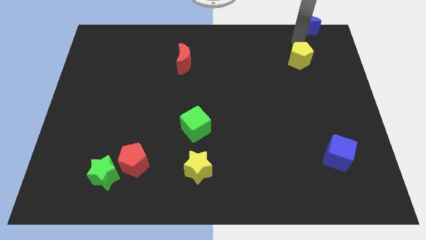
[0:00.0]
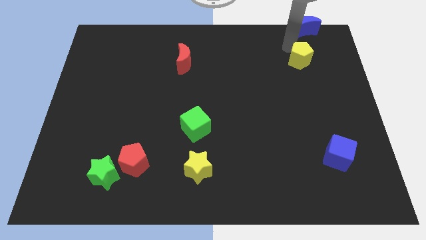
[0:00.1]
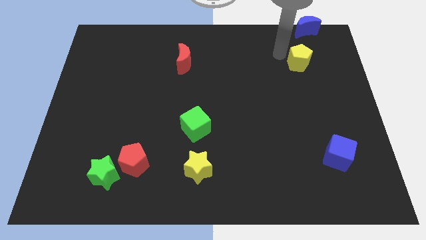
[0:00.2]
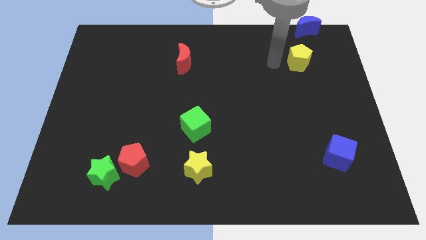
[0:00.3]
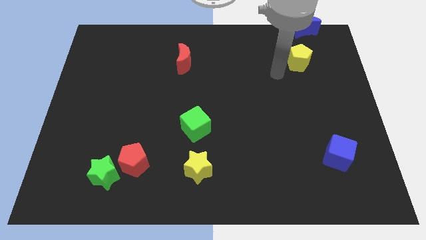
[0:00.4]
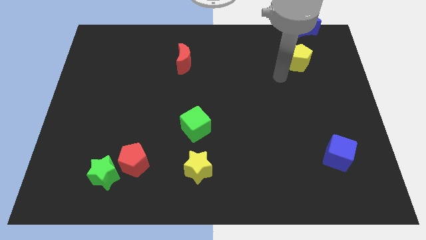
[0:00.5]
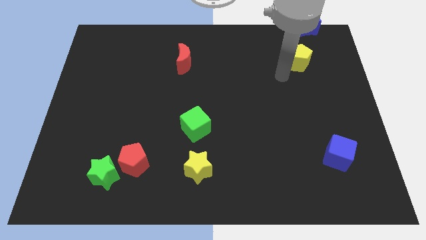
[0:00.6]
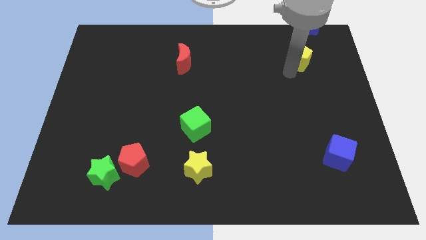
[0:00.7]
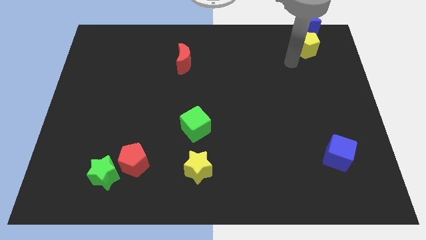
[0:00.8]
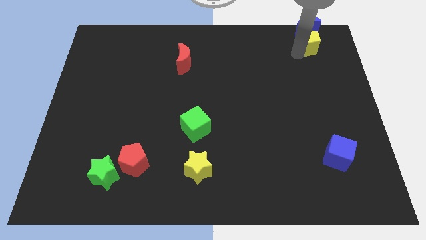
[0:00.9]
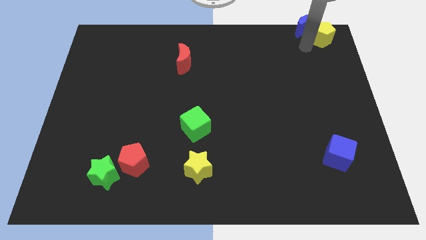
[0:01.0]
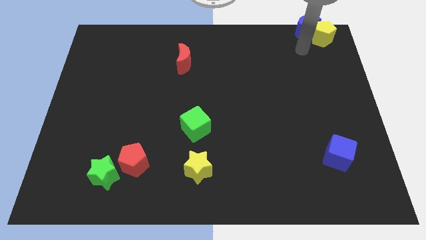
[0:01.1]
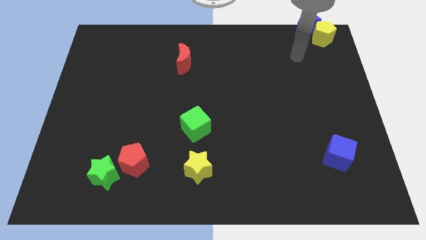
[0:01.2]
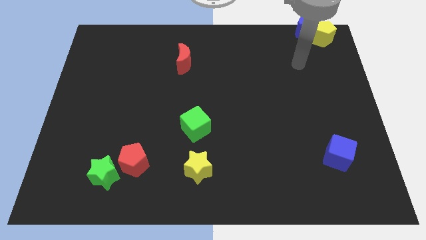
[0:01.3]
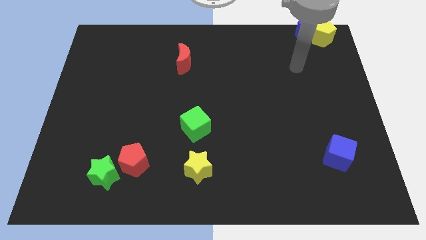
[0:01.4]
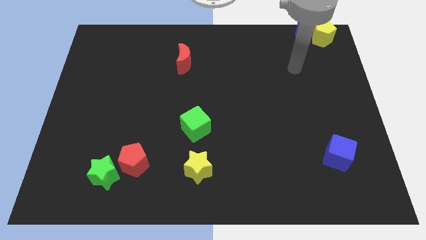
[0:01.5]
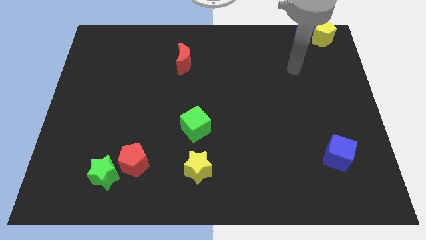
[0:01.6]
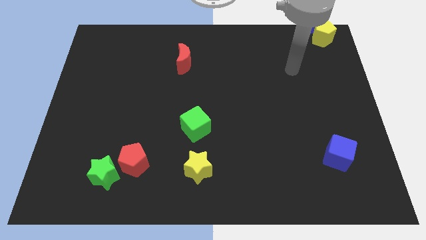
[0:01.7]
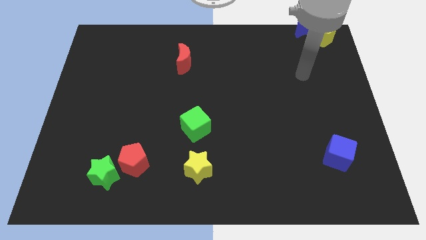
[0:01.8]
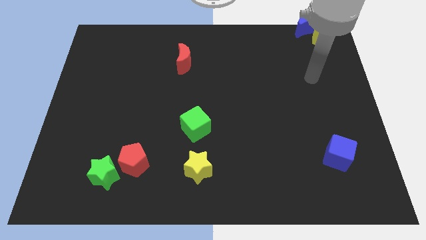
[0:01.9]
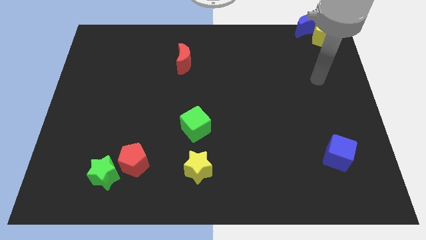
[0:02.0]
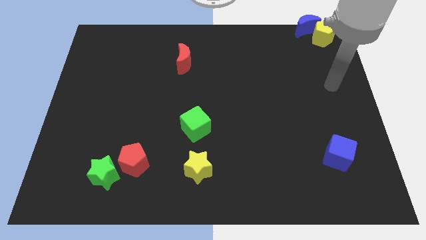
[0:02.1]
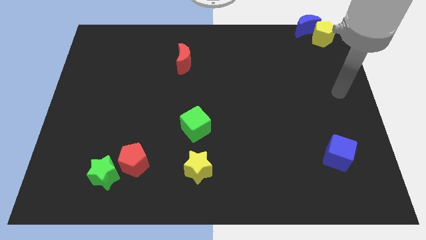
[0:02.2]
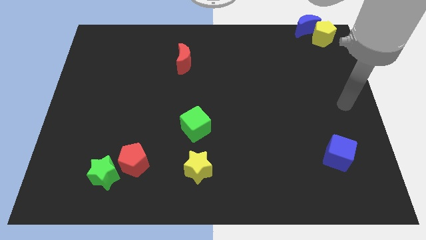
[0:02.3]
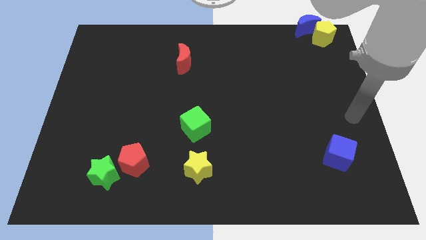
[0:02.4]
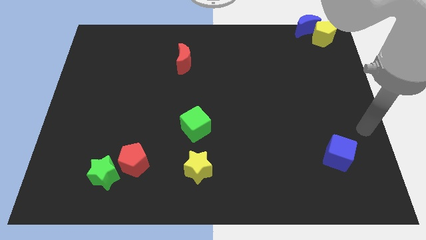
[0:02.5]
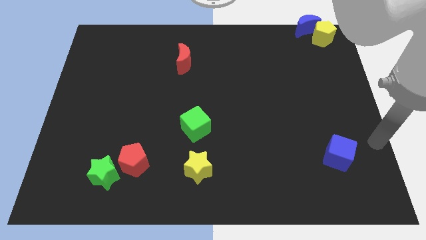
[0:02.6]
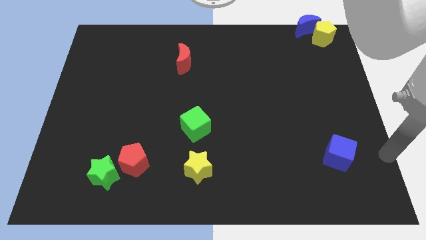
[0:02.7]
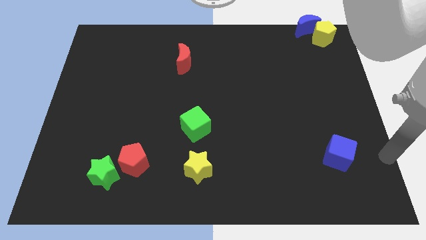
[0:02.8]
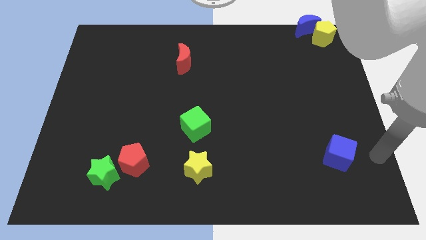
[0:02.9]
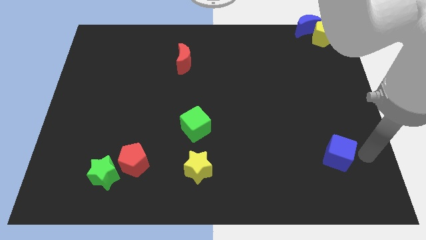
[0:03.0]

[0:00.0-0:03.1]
move the arm to the right of the blue cube

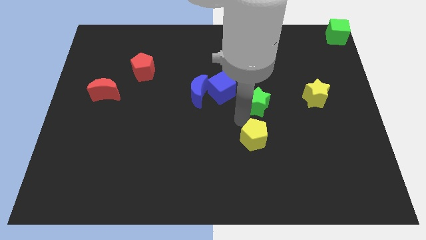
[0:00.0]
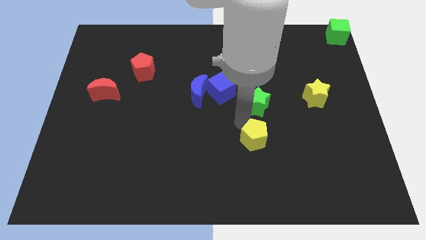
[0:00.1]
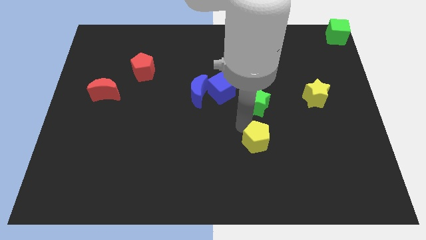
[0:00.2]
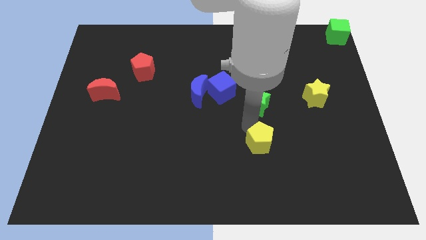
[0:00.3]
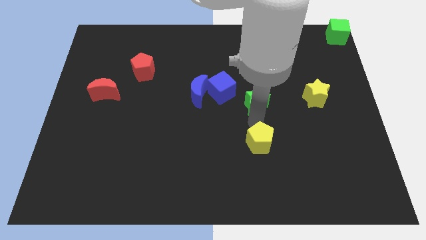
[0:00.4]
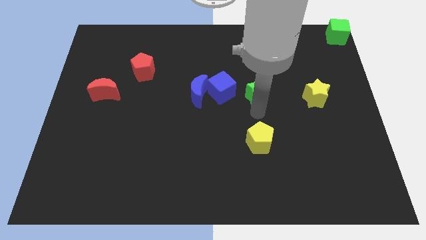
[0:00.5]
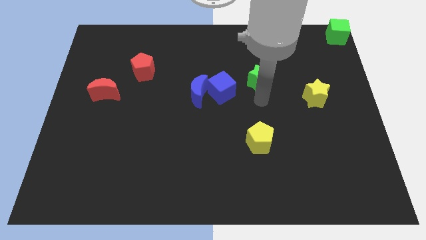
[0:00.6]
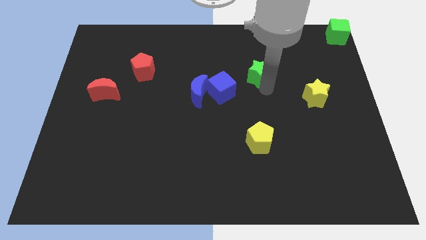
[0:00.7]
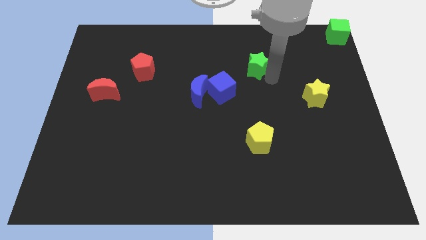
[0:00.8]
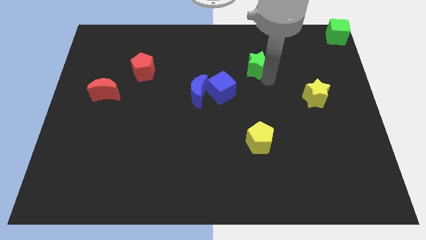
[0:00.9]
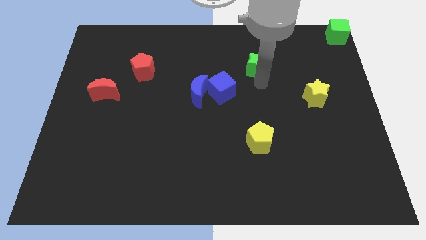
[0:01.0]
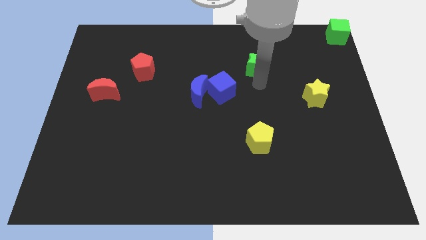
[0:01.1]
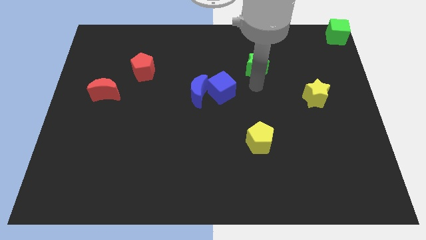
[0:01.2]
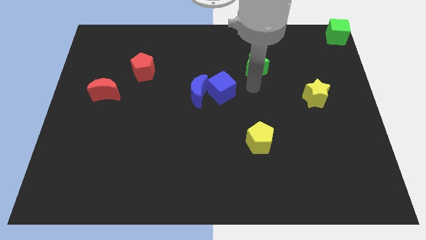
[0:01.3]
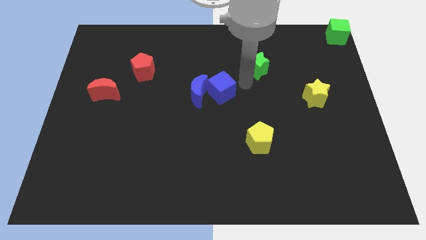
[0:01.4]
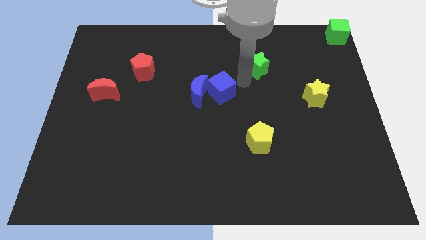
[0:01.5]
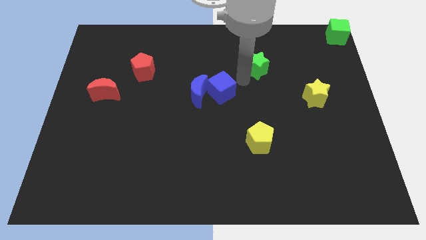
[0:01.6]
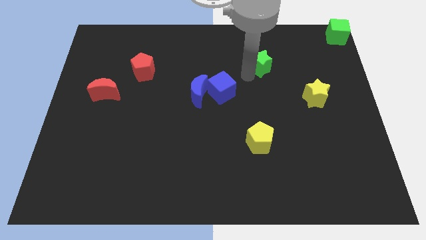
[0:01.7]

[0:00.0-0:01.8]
place the green star diagonally to the blue cube

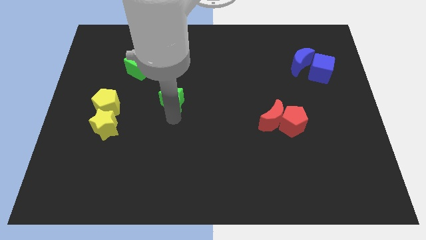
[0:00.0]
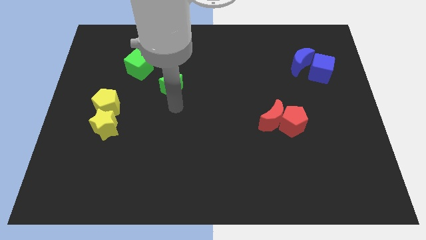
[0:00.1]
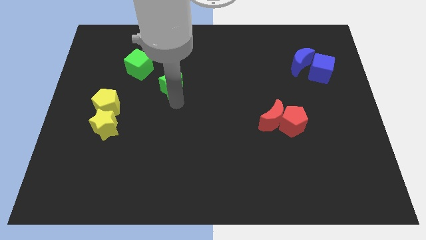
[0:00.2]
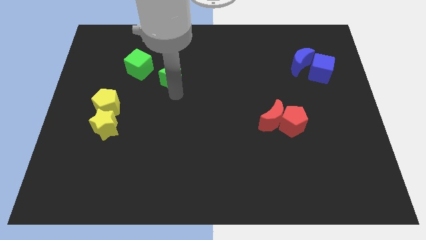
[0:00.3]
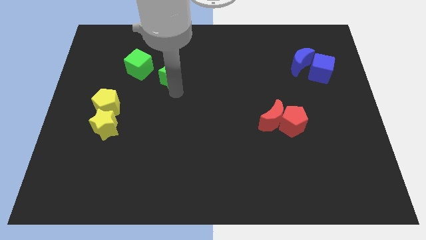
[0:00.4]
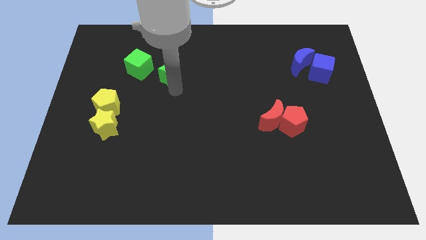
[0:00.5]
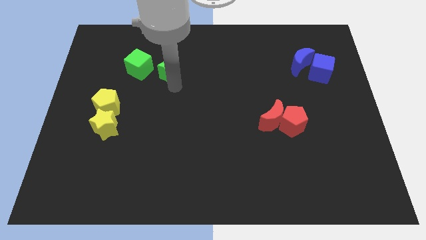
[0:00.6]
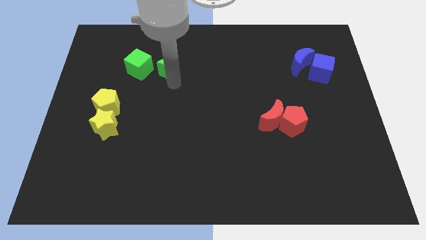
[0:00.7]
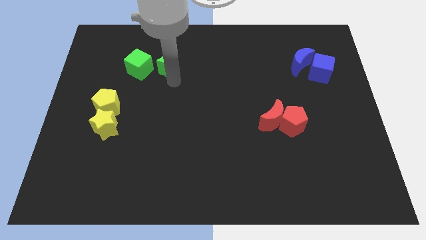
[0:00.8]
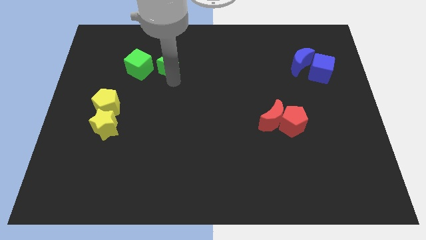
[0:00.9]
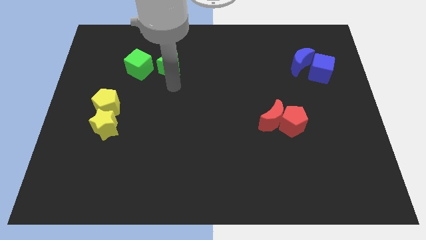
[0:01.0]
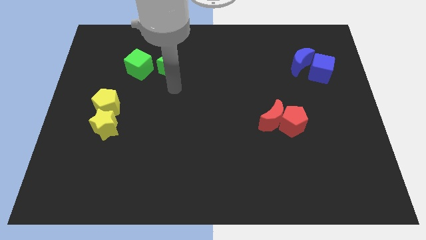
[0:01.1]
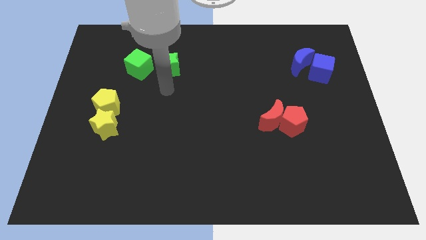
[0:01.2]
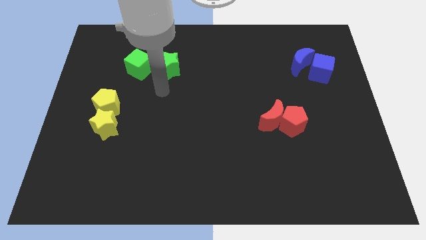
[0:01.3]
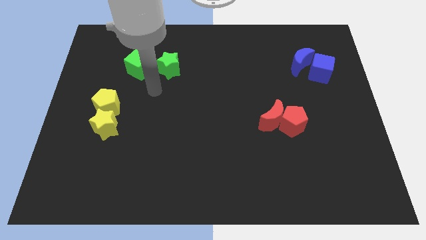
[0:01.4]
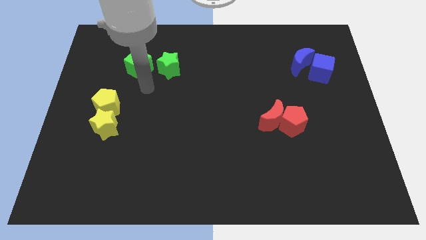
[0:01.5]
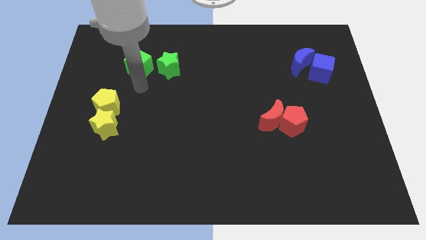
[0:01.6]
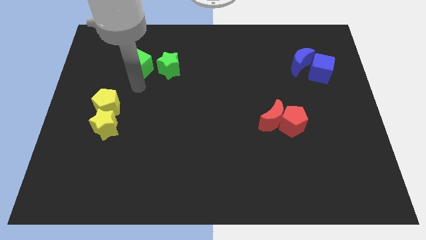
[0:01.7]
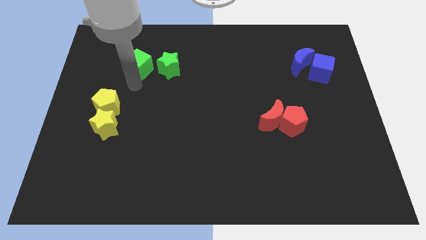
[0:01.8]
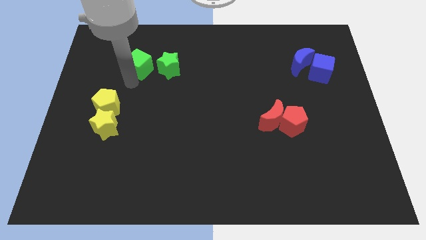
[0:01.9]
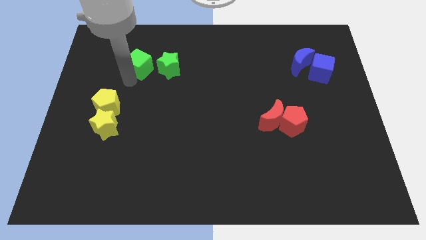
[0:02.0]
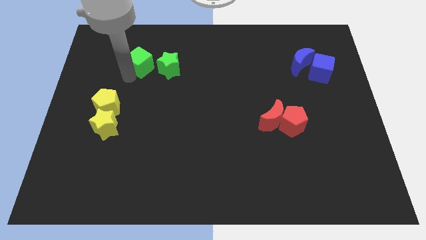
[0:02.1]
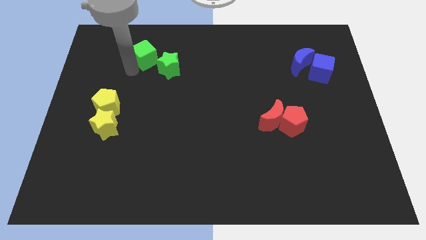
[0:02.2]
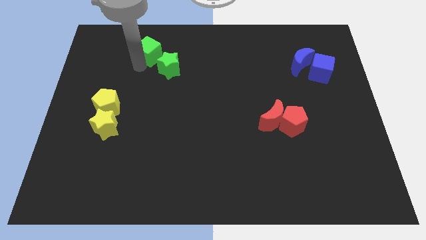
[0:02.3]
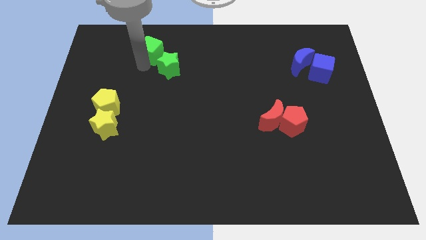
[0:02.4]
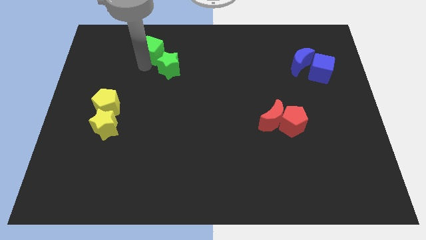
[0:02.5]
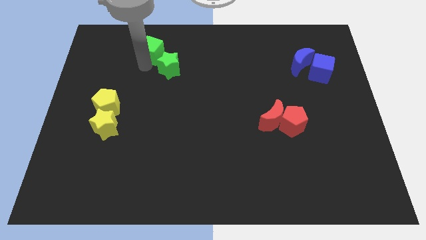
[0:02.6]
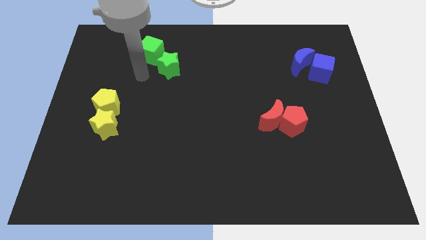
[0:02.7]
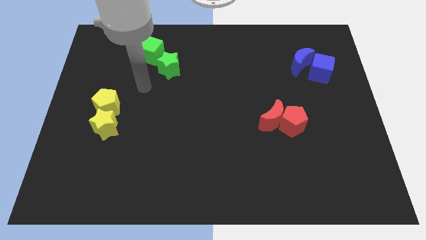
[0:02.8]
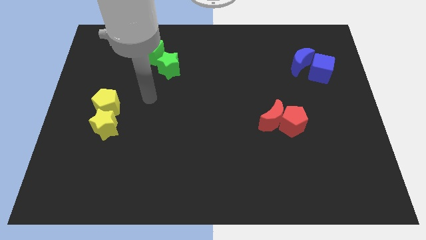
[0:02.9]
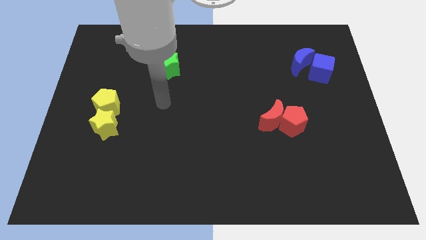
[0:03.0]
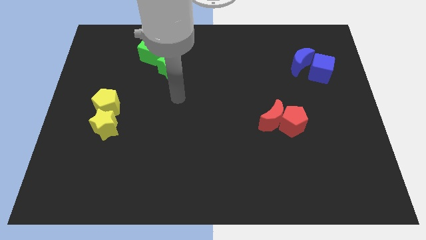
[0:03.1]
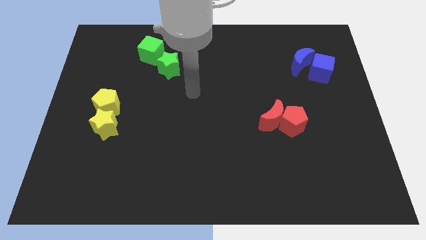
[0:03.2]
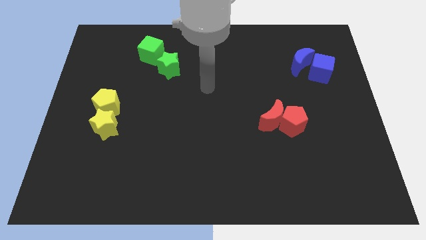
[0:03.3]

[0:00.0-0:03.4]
place green cube to the top left of the green star

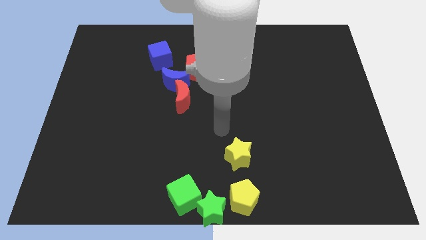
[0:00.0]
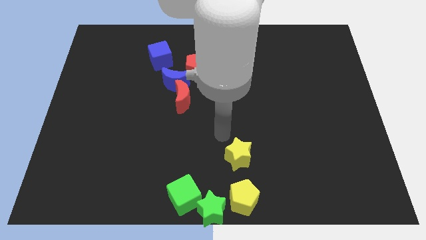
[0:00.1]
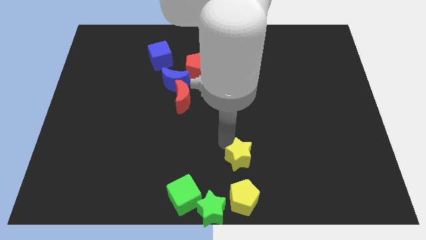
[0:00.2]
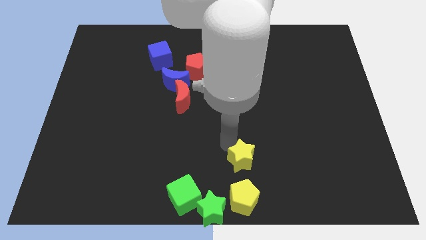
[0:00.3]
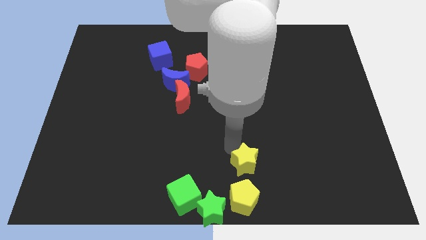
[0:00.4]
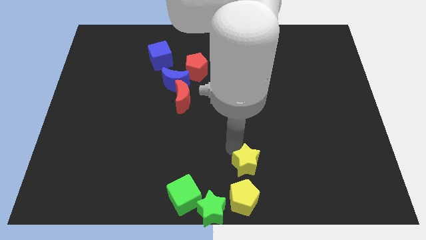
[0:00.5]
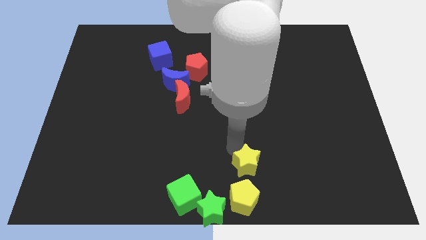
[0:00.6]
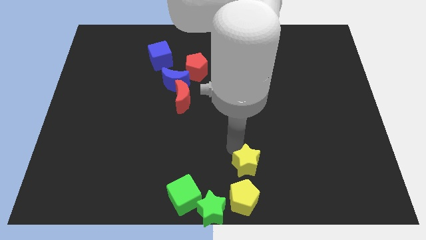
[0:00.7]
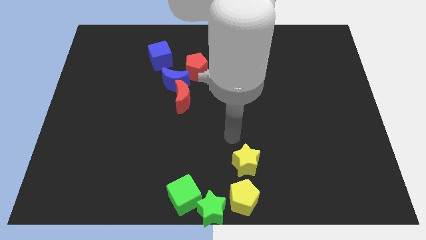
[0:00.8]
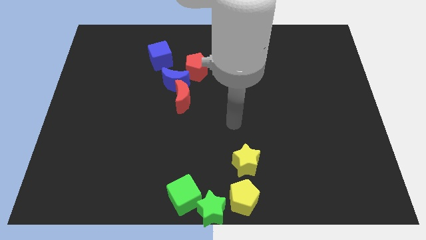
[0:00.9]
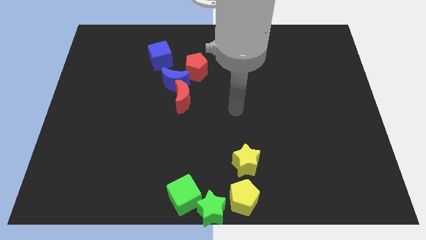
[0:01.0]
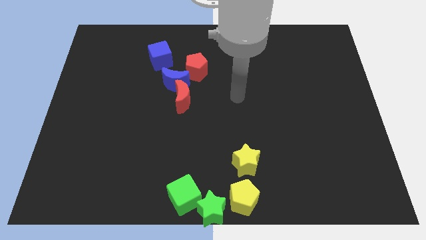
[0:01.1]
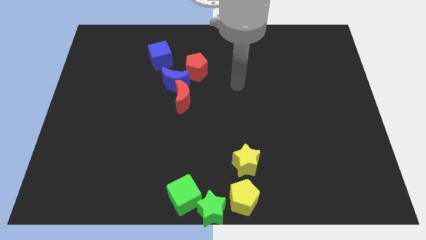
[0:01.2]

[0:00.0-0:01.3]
push the yellow star close to the yellow pentagon
